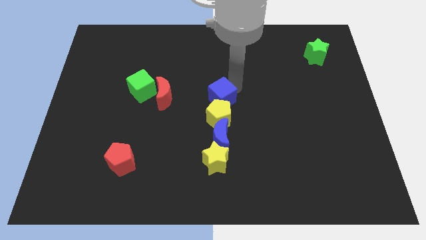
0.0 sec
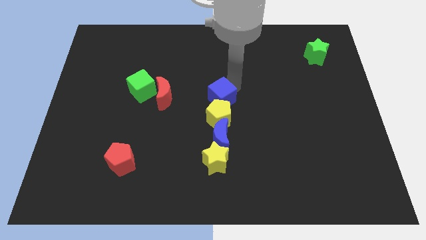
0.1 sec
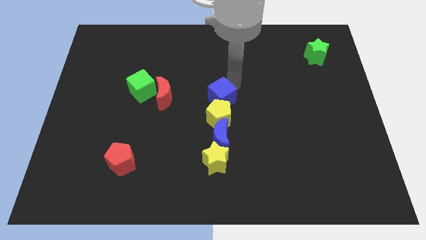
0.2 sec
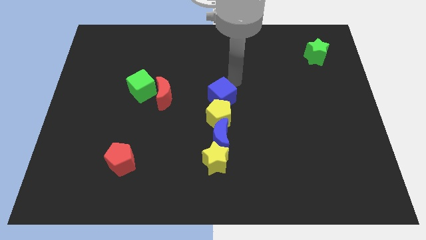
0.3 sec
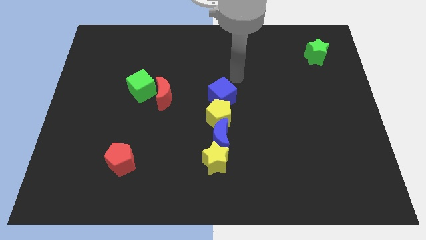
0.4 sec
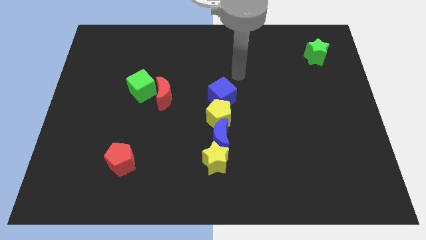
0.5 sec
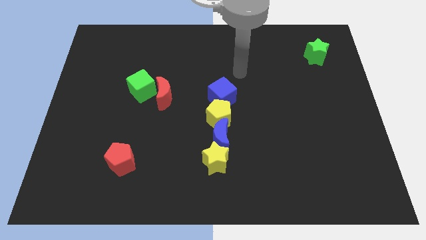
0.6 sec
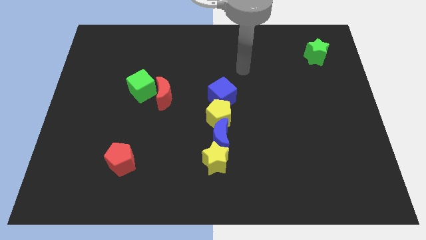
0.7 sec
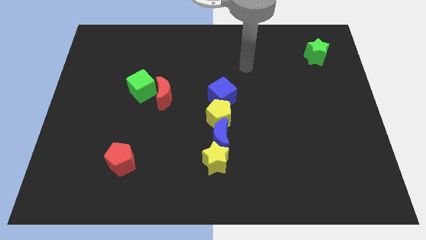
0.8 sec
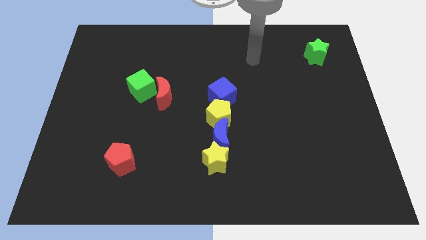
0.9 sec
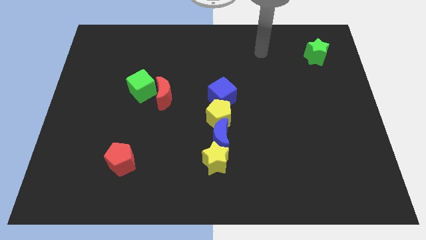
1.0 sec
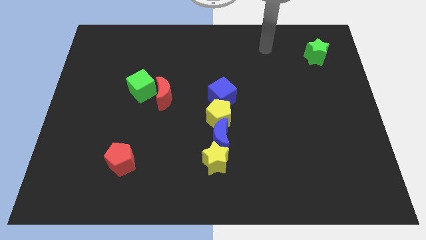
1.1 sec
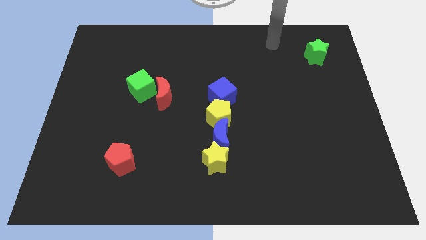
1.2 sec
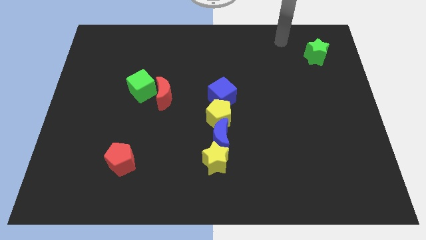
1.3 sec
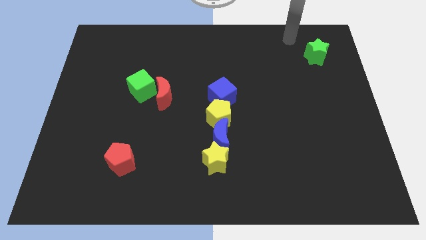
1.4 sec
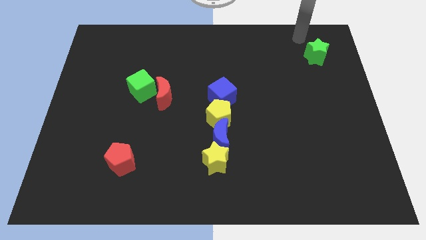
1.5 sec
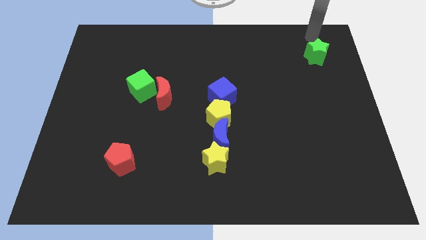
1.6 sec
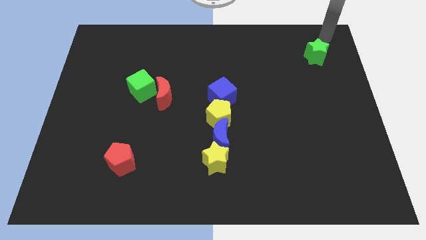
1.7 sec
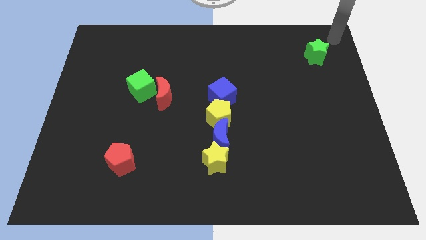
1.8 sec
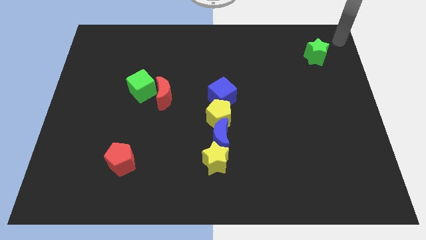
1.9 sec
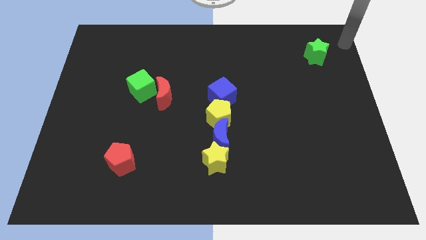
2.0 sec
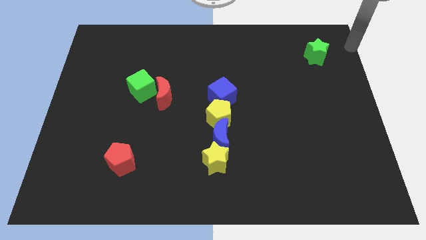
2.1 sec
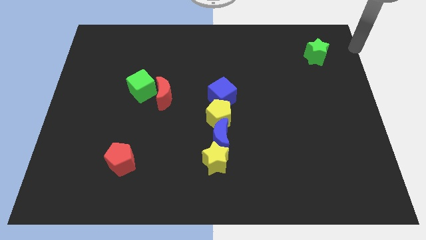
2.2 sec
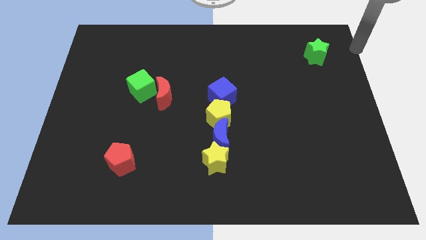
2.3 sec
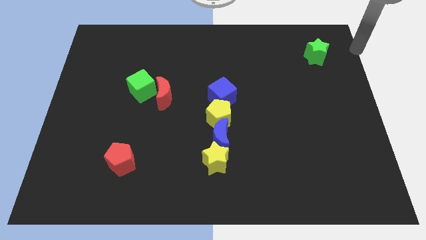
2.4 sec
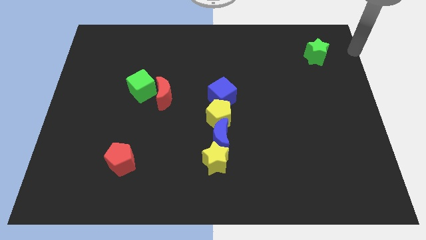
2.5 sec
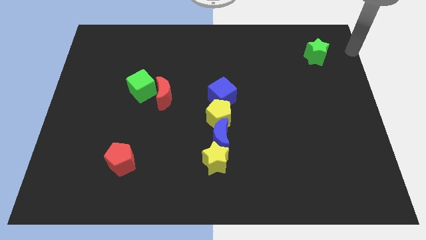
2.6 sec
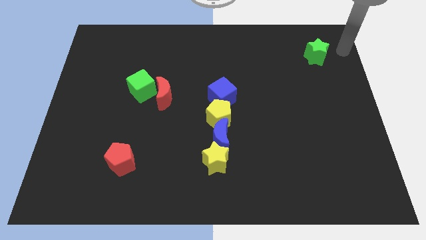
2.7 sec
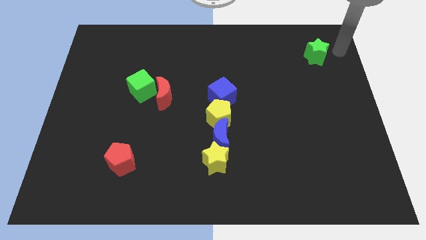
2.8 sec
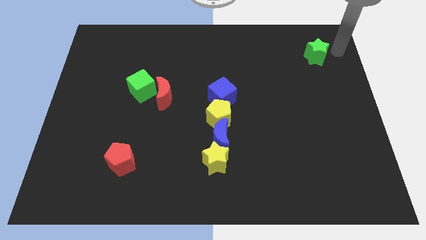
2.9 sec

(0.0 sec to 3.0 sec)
move your arm away from the blue cube

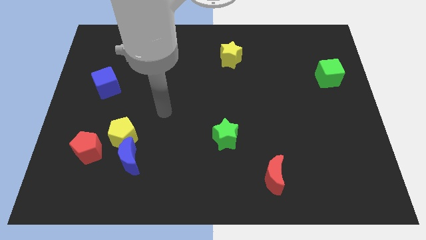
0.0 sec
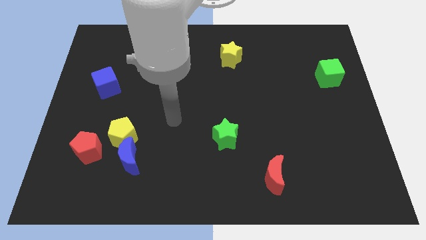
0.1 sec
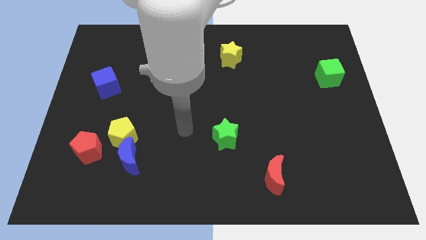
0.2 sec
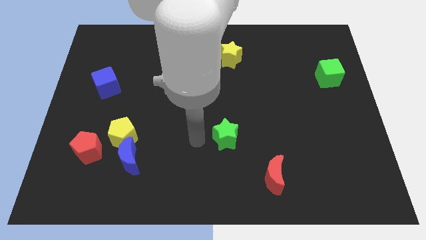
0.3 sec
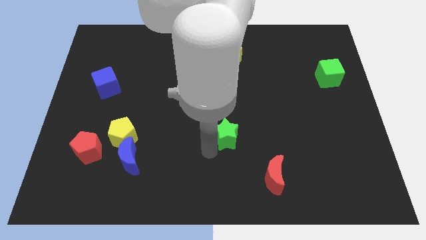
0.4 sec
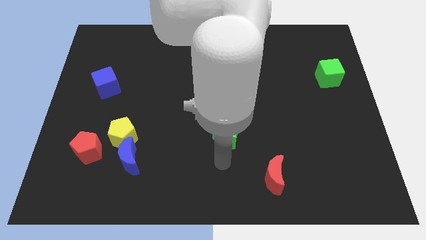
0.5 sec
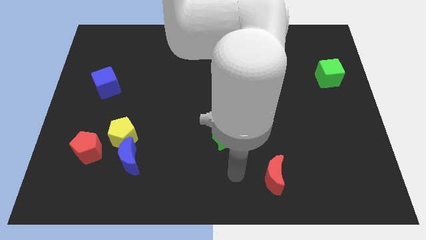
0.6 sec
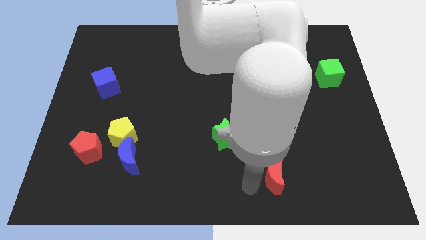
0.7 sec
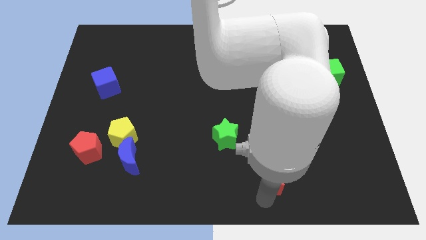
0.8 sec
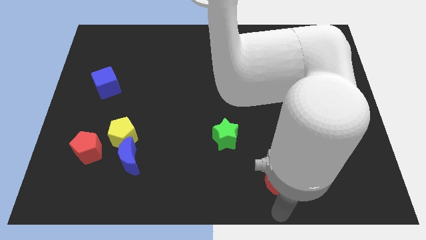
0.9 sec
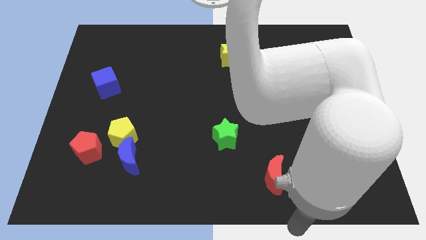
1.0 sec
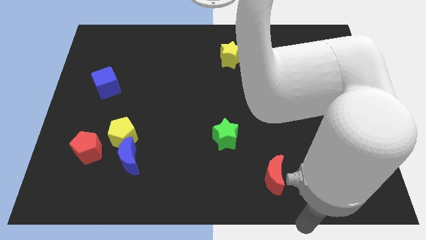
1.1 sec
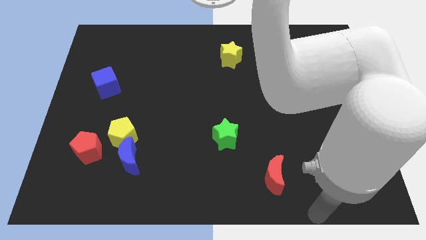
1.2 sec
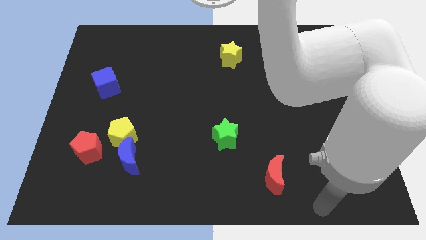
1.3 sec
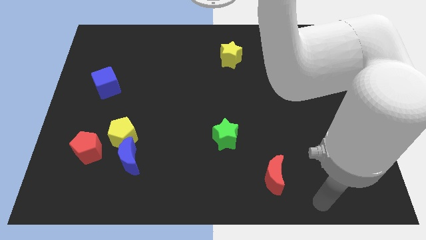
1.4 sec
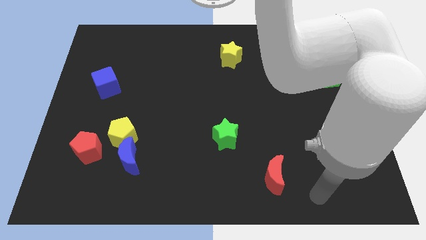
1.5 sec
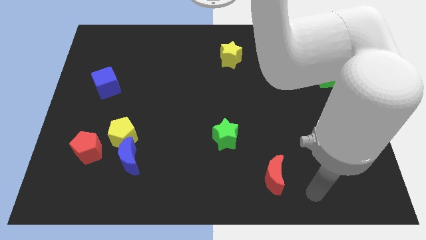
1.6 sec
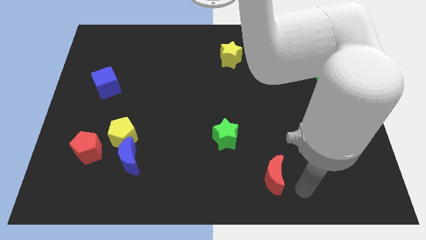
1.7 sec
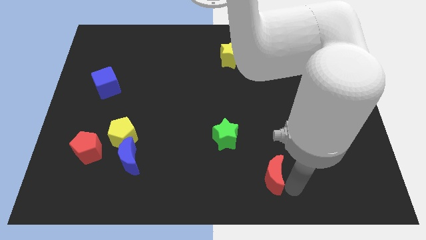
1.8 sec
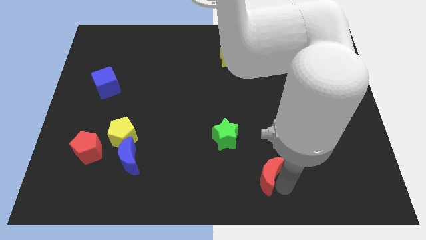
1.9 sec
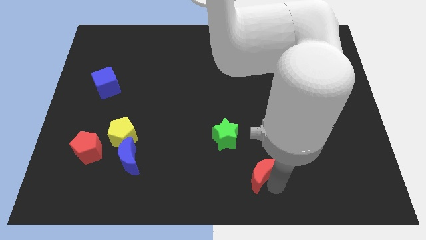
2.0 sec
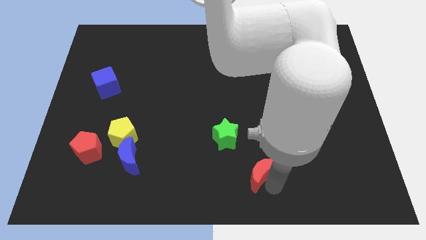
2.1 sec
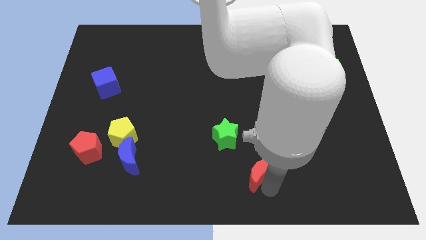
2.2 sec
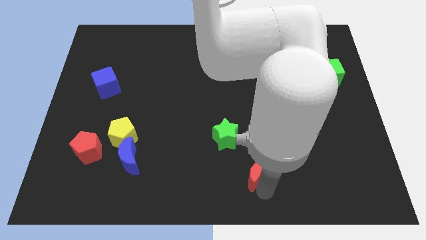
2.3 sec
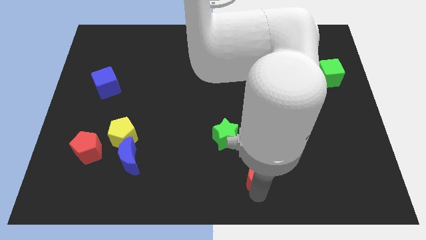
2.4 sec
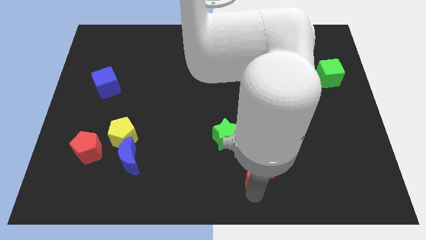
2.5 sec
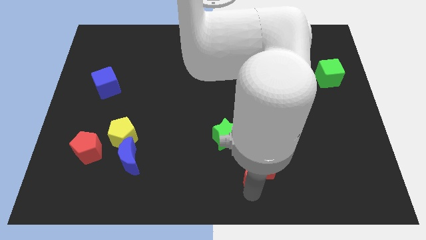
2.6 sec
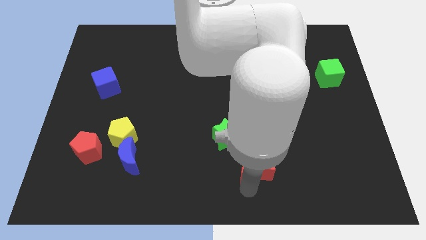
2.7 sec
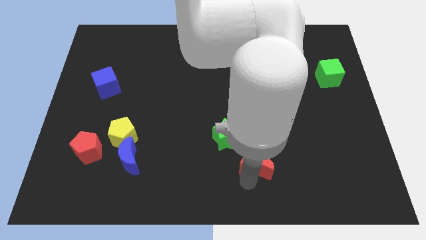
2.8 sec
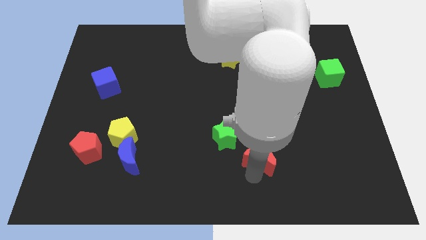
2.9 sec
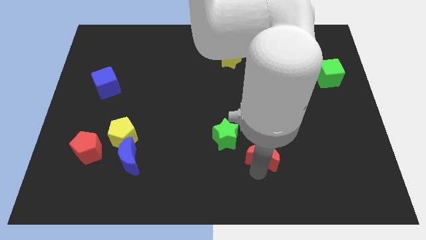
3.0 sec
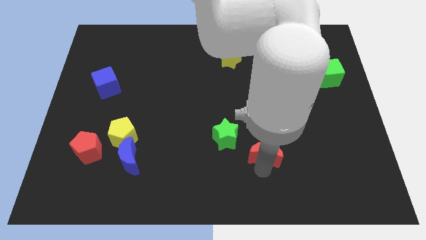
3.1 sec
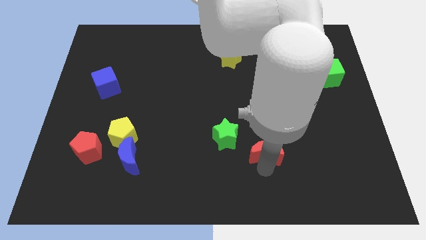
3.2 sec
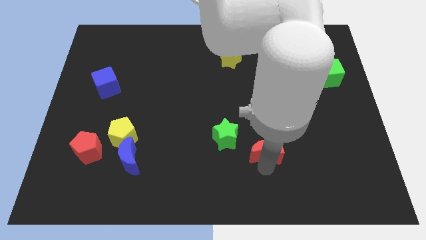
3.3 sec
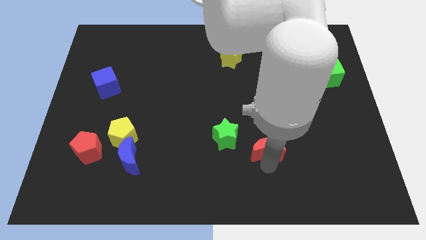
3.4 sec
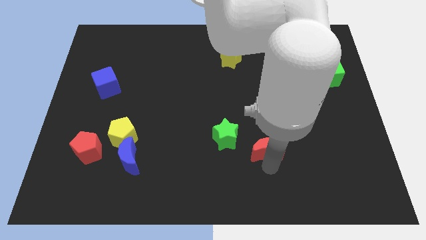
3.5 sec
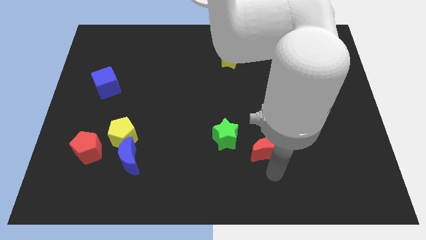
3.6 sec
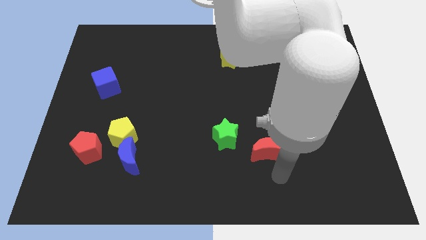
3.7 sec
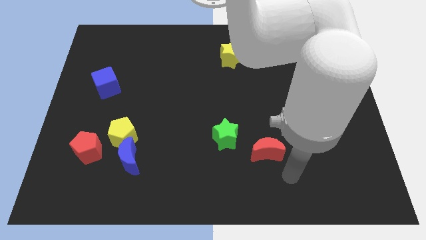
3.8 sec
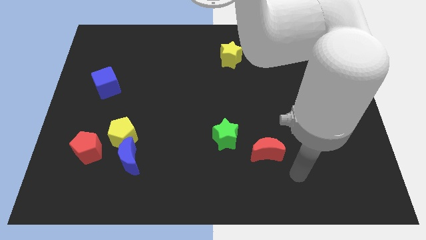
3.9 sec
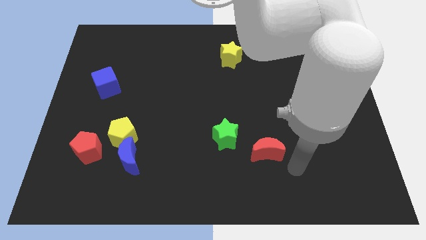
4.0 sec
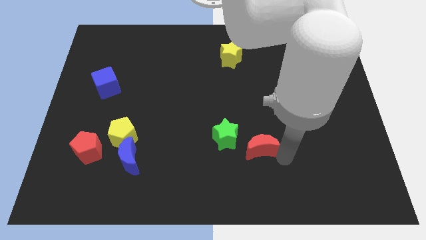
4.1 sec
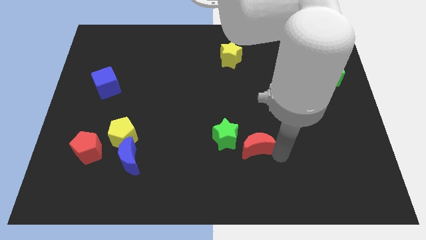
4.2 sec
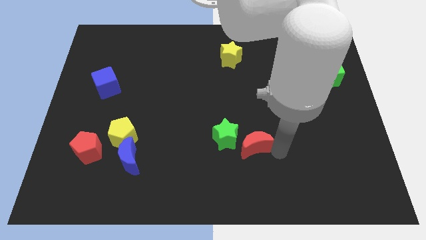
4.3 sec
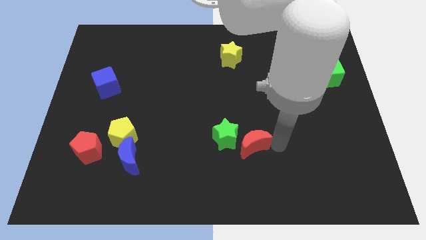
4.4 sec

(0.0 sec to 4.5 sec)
place the red moon to the bottom right of the green star

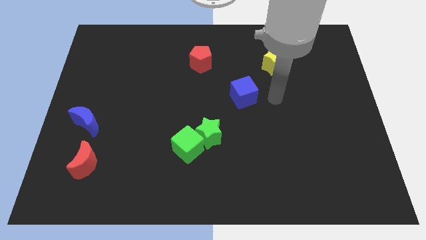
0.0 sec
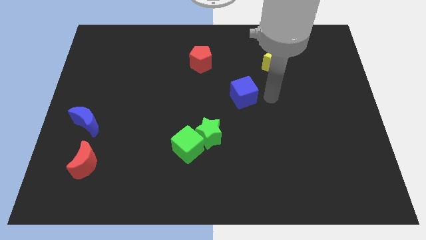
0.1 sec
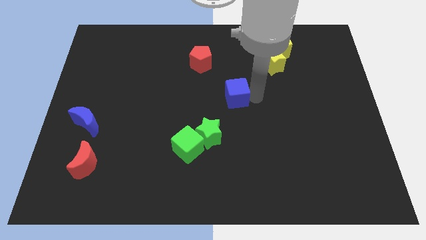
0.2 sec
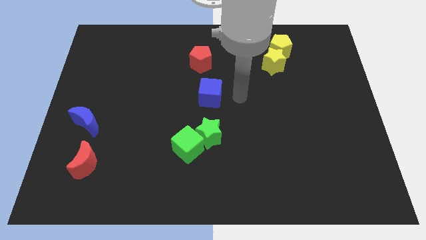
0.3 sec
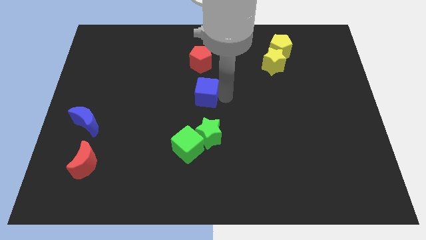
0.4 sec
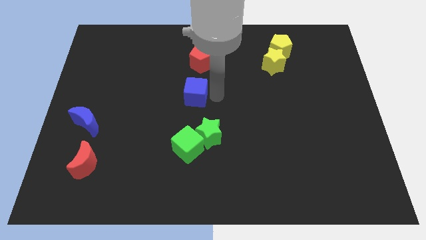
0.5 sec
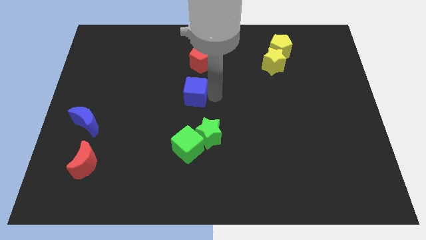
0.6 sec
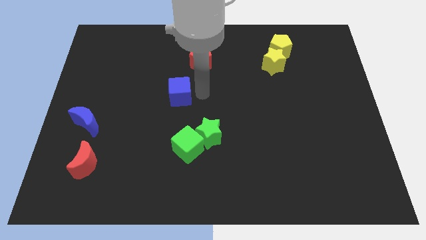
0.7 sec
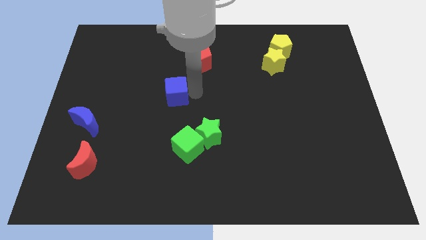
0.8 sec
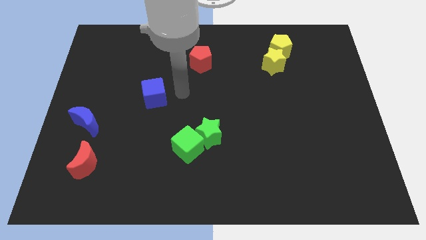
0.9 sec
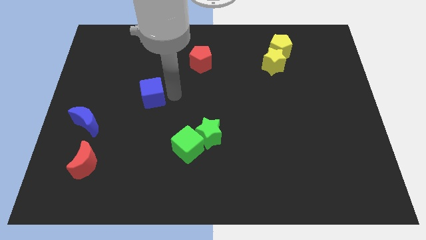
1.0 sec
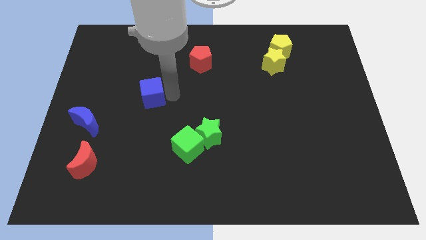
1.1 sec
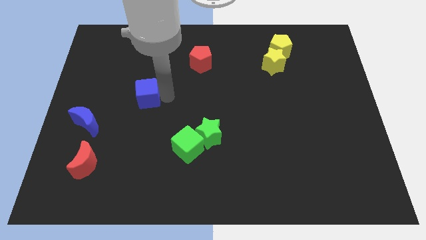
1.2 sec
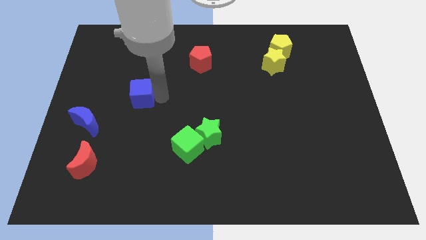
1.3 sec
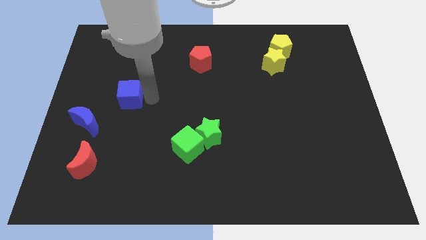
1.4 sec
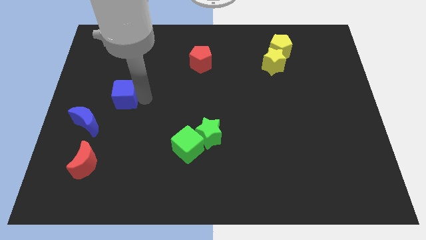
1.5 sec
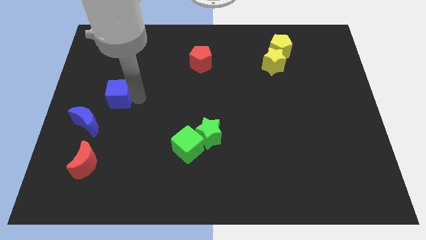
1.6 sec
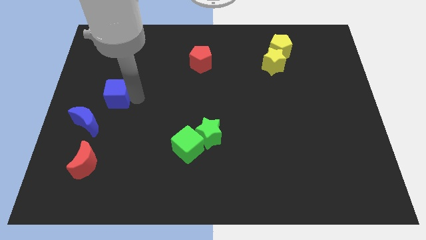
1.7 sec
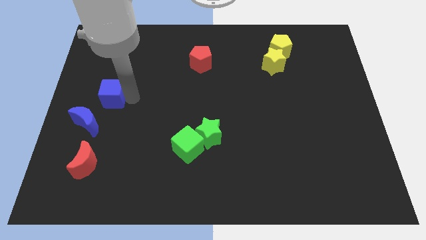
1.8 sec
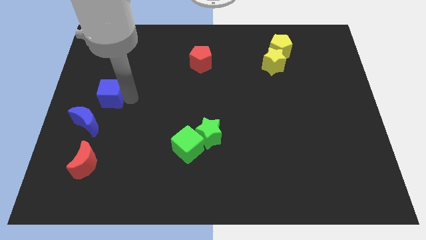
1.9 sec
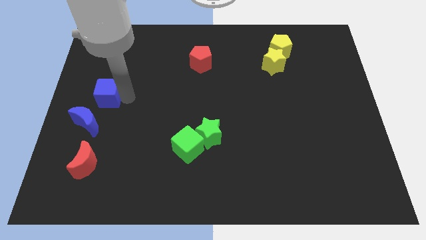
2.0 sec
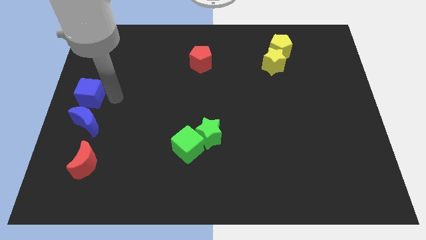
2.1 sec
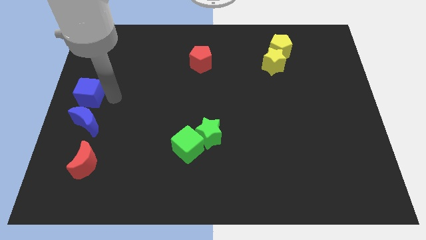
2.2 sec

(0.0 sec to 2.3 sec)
put the blue cube above blue moon
